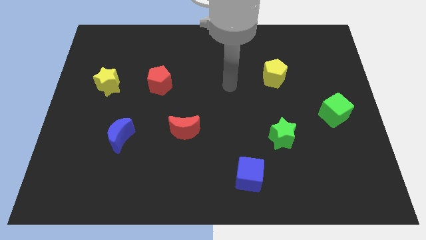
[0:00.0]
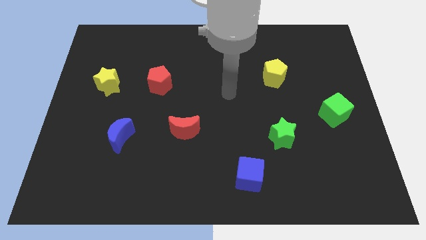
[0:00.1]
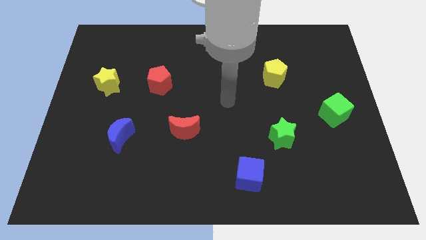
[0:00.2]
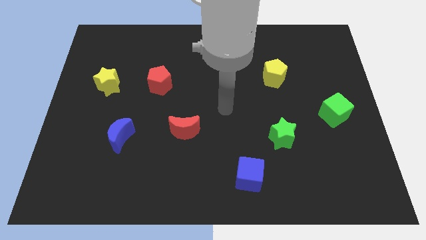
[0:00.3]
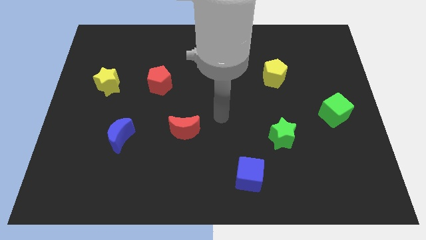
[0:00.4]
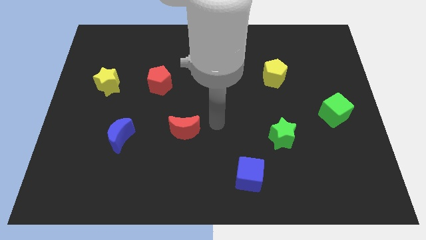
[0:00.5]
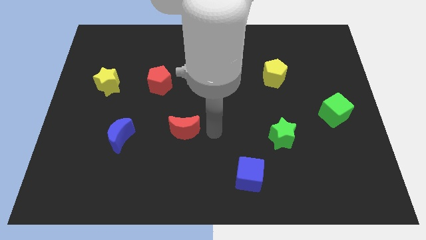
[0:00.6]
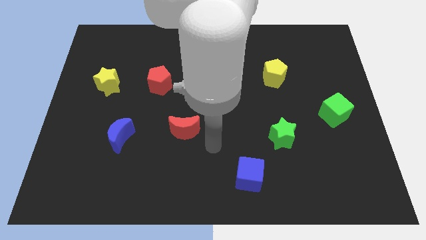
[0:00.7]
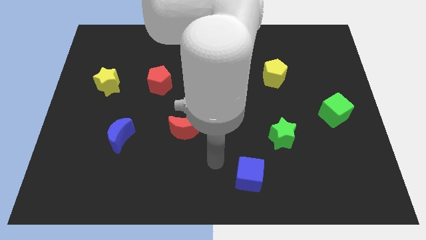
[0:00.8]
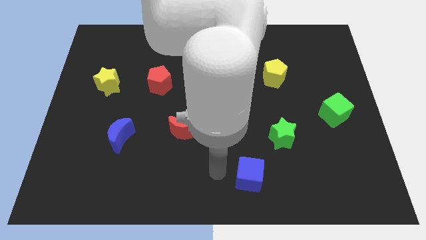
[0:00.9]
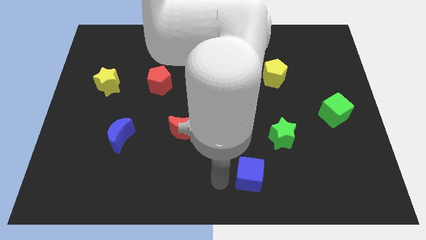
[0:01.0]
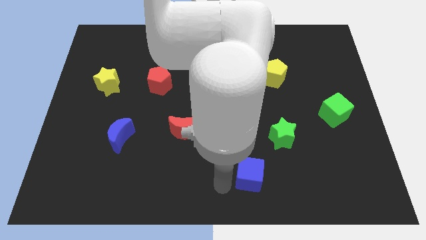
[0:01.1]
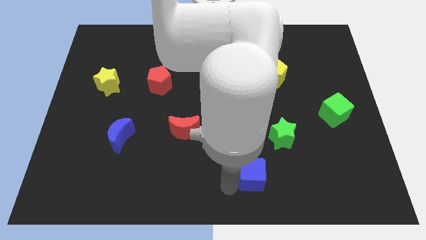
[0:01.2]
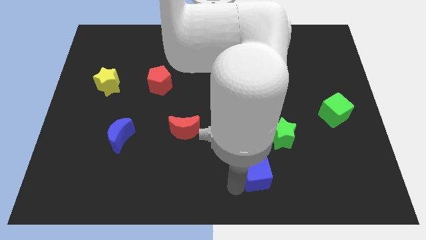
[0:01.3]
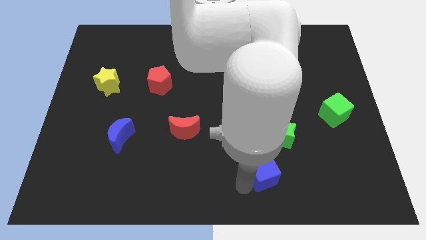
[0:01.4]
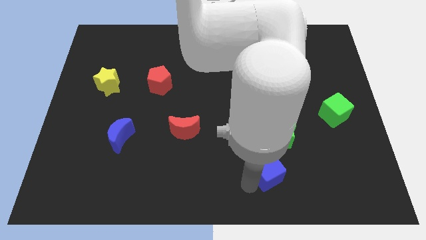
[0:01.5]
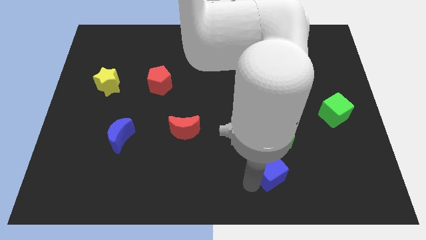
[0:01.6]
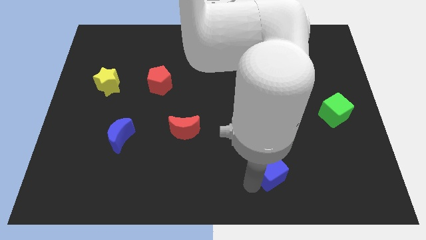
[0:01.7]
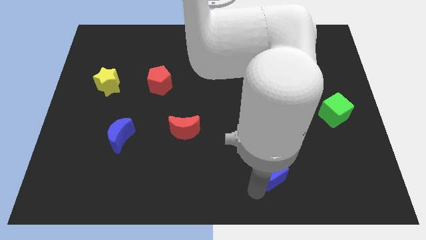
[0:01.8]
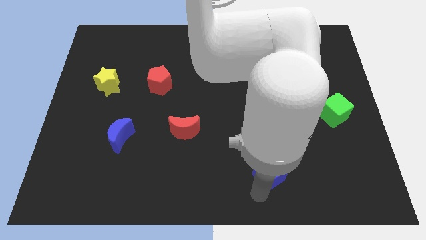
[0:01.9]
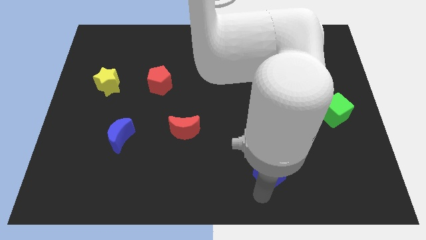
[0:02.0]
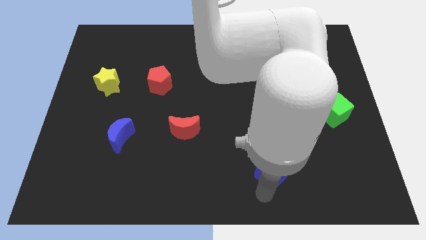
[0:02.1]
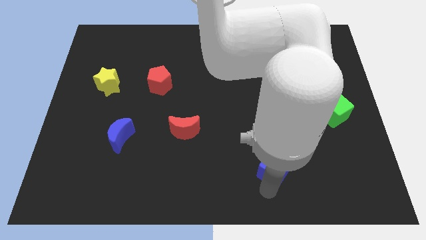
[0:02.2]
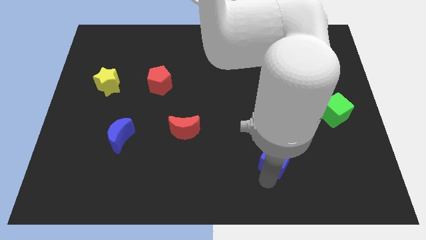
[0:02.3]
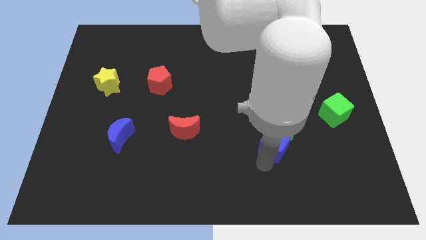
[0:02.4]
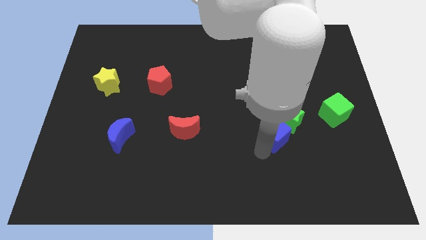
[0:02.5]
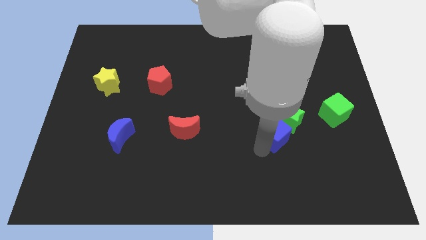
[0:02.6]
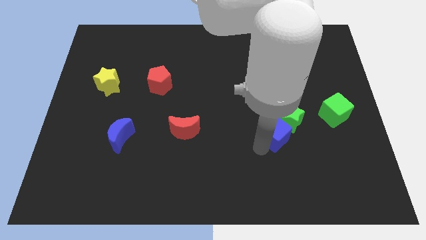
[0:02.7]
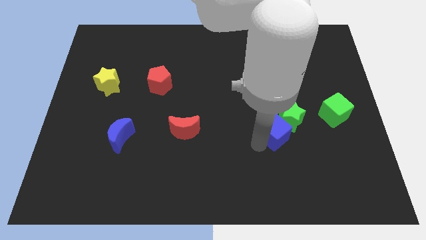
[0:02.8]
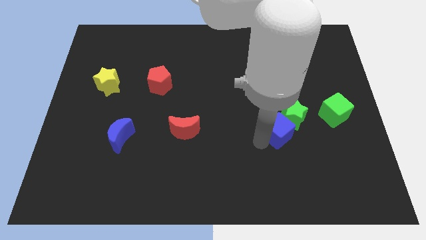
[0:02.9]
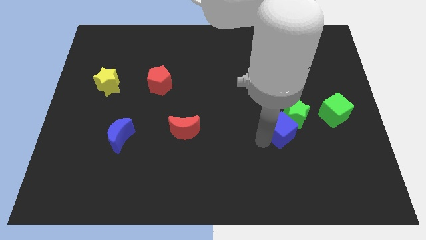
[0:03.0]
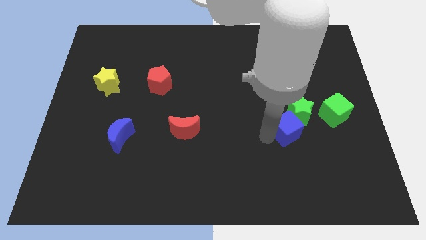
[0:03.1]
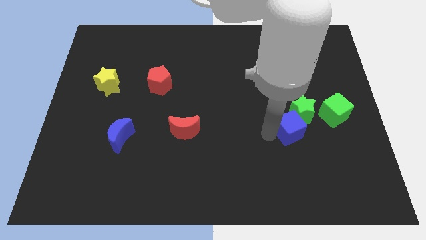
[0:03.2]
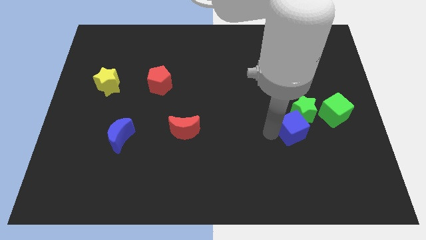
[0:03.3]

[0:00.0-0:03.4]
move the blue cube along with green star to the left of the green cube

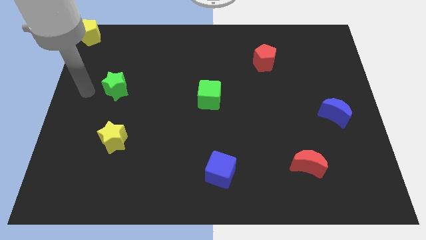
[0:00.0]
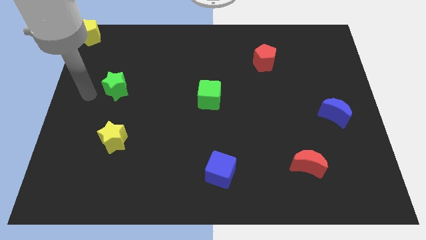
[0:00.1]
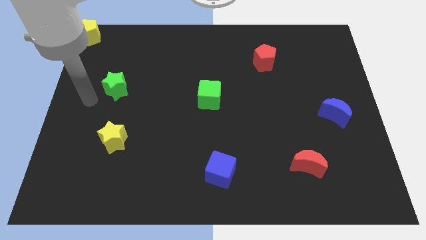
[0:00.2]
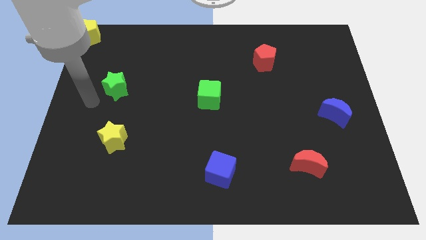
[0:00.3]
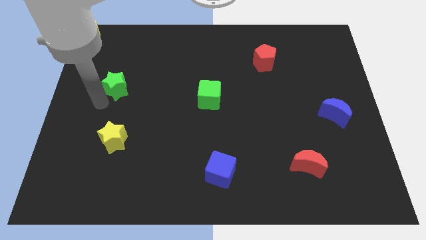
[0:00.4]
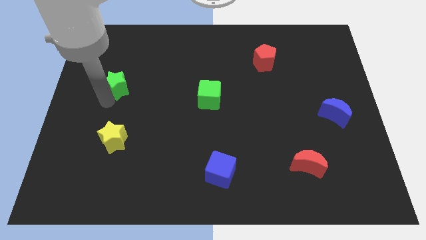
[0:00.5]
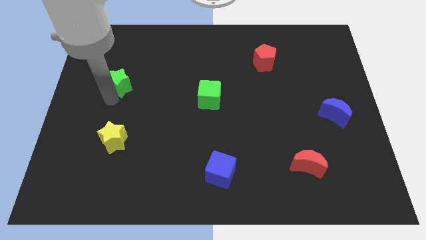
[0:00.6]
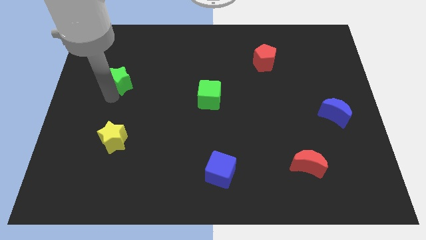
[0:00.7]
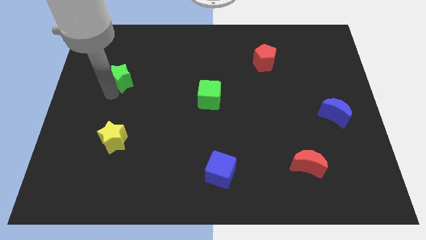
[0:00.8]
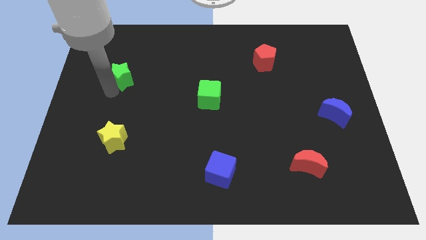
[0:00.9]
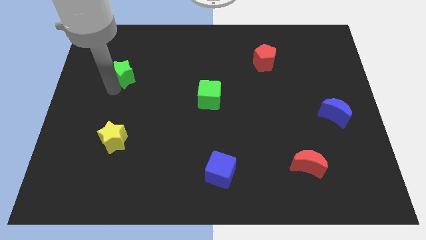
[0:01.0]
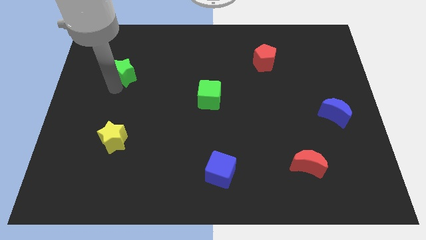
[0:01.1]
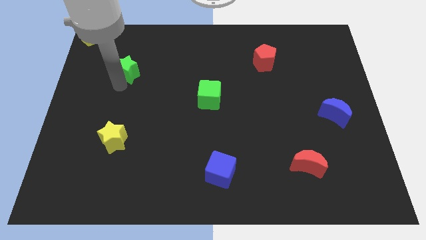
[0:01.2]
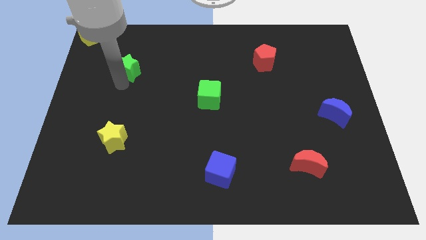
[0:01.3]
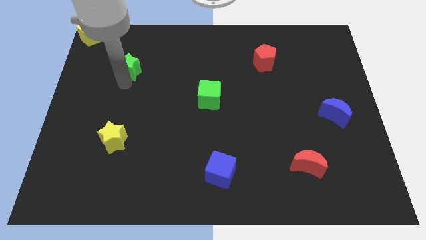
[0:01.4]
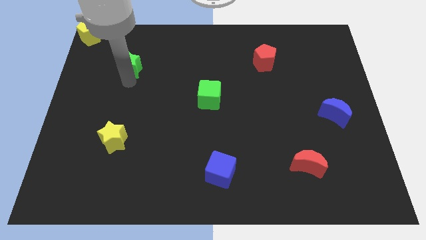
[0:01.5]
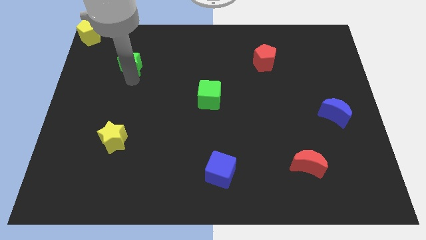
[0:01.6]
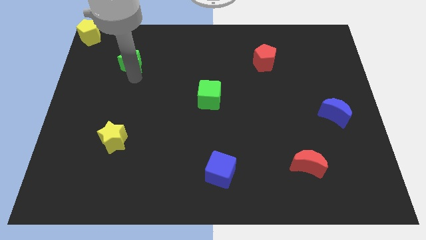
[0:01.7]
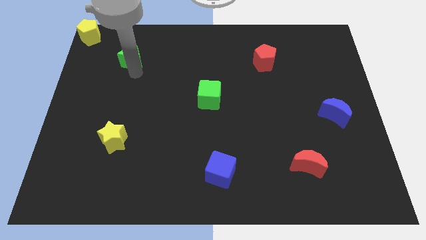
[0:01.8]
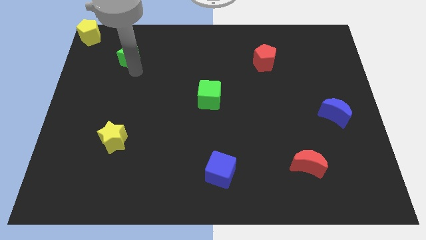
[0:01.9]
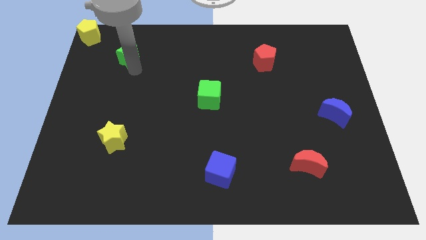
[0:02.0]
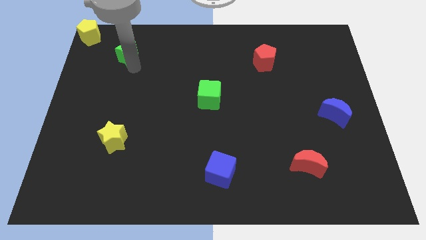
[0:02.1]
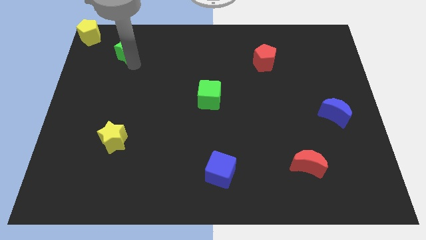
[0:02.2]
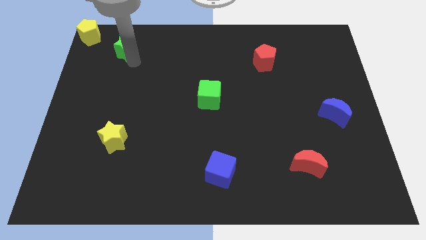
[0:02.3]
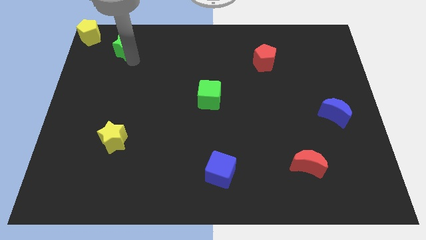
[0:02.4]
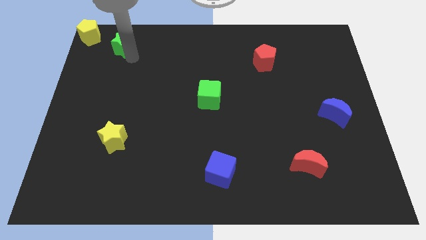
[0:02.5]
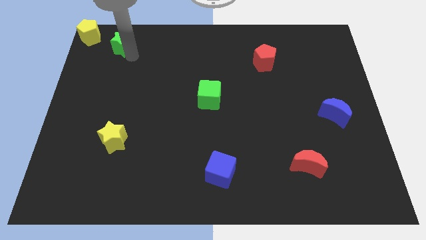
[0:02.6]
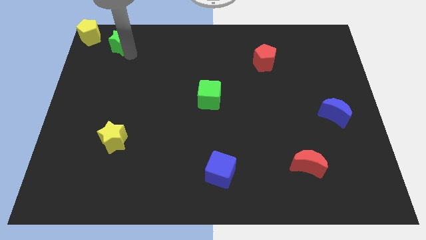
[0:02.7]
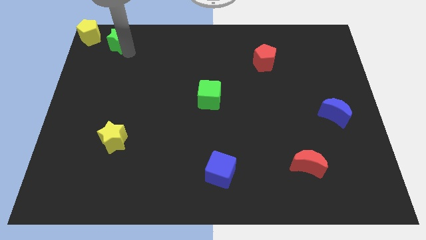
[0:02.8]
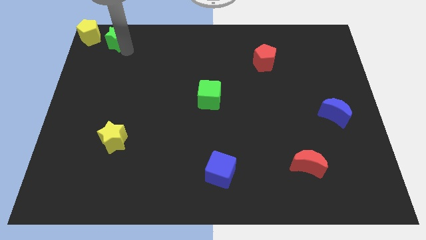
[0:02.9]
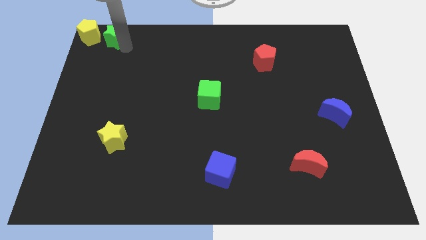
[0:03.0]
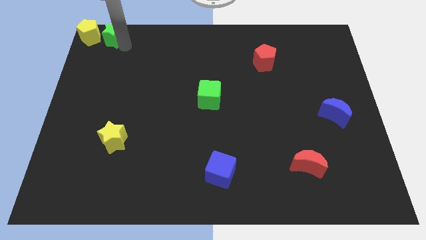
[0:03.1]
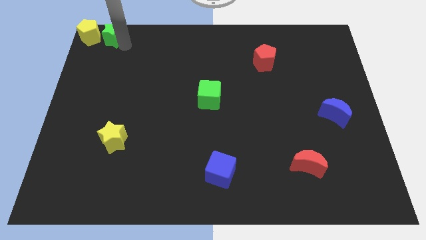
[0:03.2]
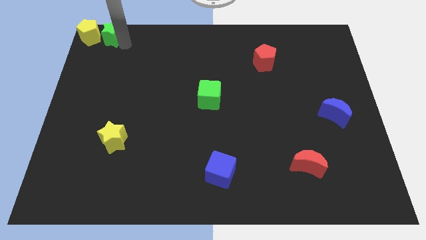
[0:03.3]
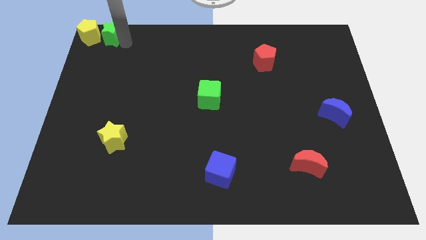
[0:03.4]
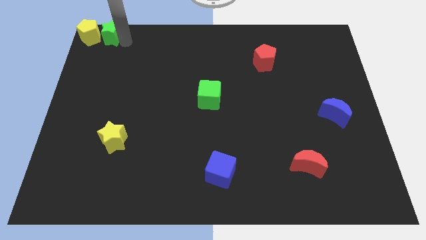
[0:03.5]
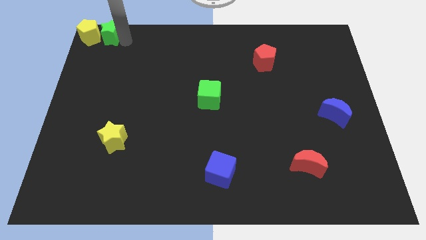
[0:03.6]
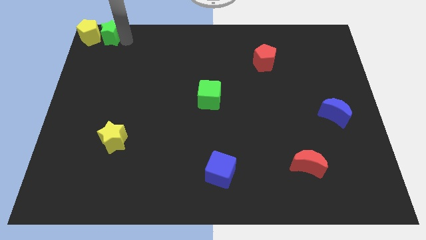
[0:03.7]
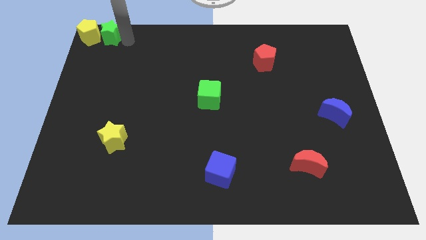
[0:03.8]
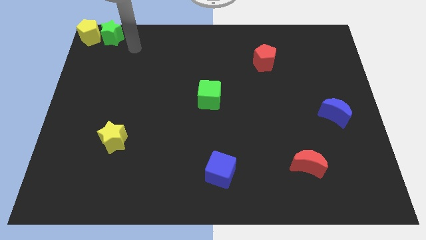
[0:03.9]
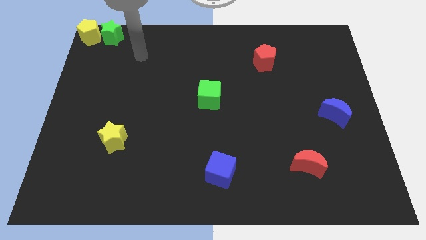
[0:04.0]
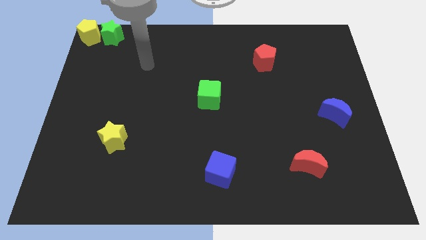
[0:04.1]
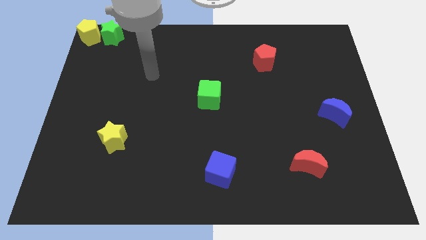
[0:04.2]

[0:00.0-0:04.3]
push the green star towards the yellow pentagon

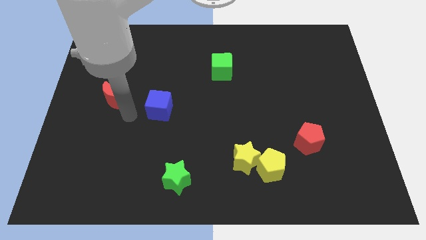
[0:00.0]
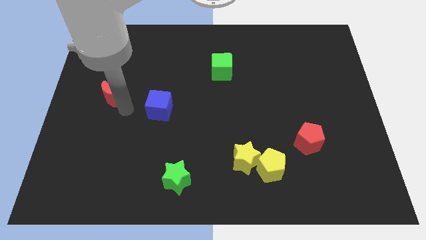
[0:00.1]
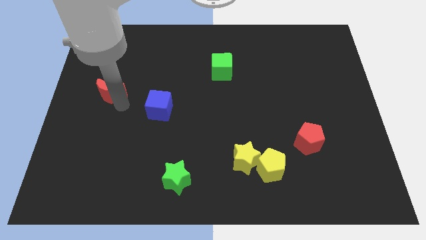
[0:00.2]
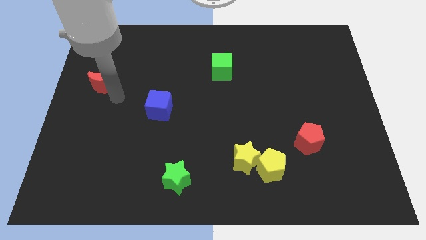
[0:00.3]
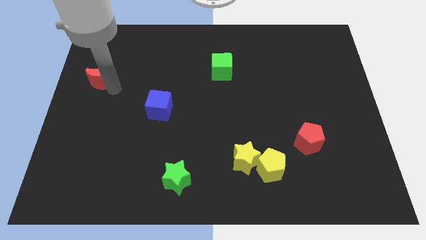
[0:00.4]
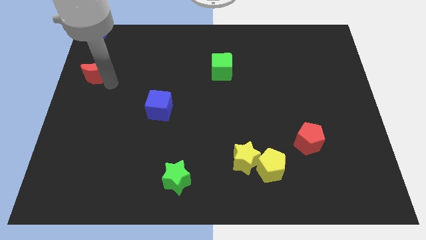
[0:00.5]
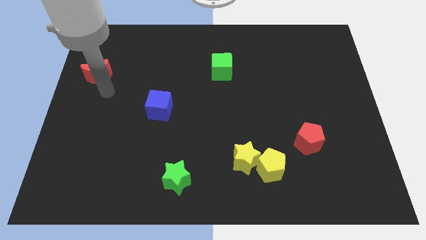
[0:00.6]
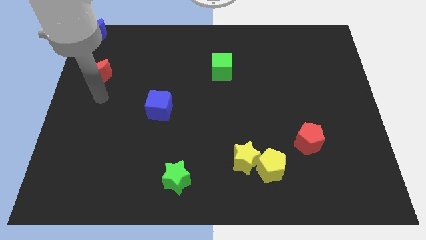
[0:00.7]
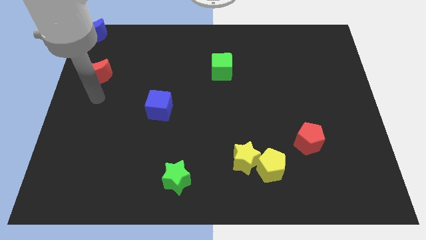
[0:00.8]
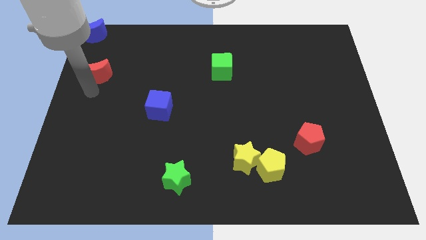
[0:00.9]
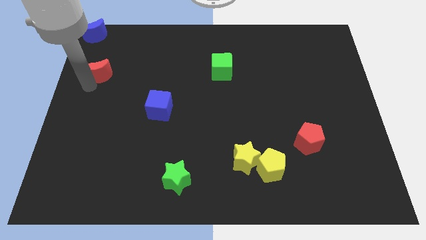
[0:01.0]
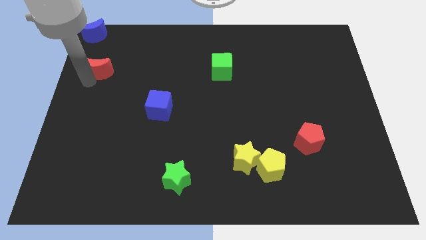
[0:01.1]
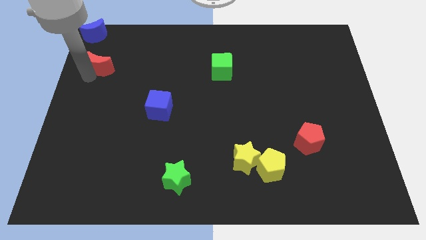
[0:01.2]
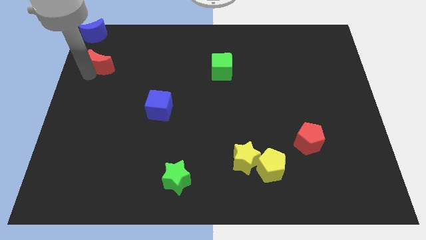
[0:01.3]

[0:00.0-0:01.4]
put the red crescent to the bottom side of the blue crescent
